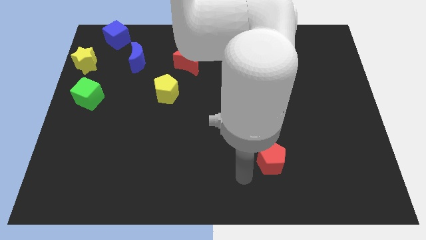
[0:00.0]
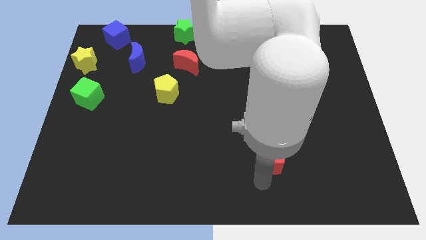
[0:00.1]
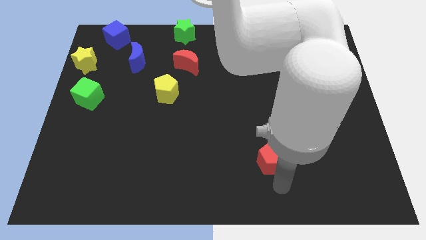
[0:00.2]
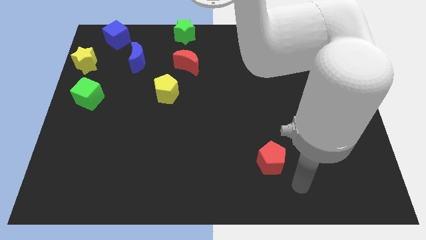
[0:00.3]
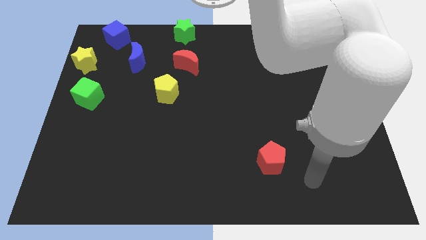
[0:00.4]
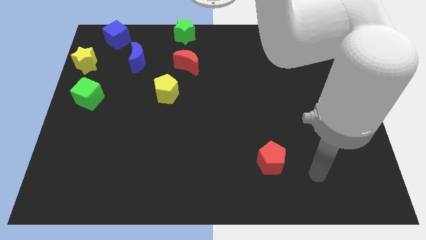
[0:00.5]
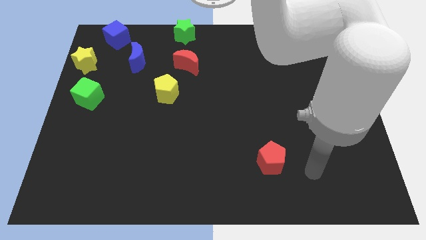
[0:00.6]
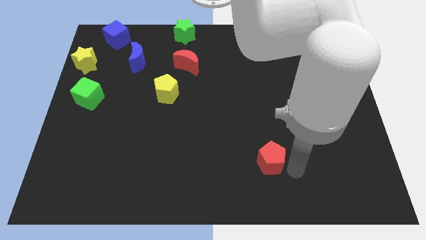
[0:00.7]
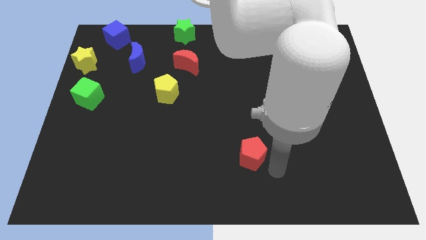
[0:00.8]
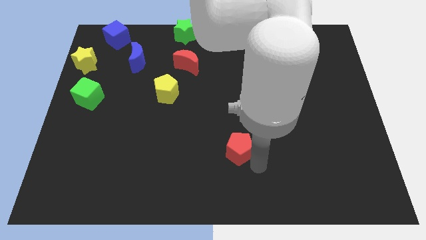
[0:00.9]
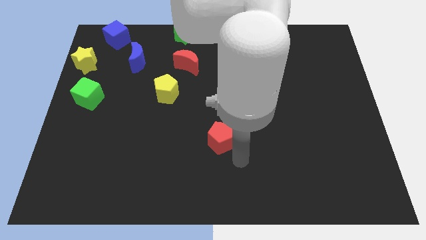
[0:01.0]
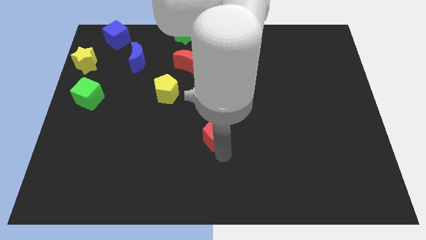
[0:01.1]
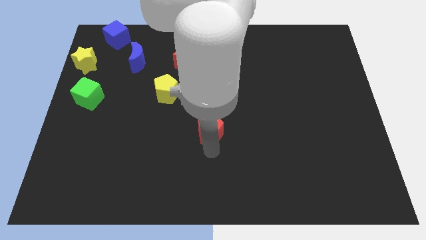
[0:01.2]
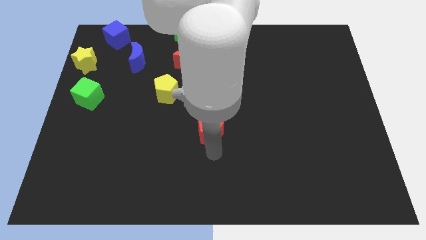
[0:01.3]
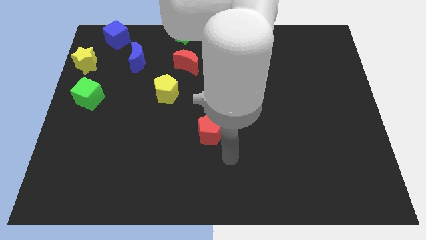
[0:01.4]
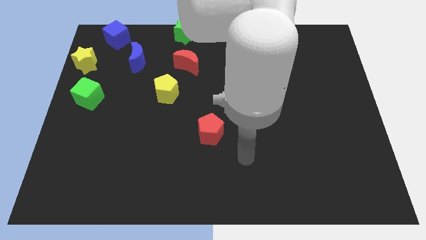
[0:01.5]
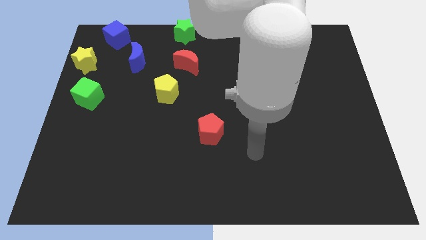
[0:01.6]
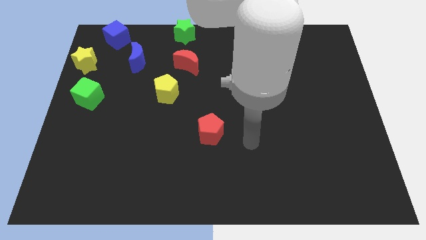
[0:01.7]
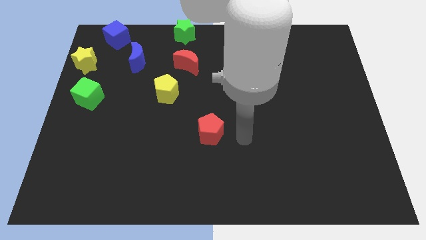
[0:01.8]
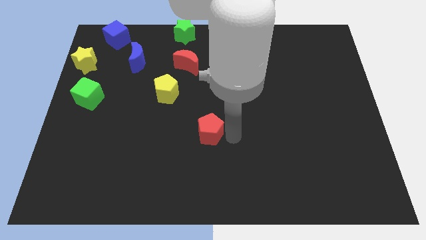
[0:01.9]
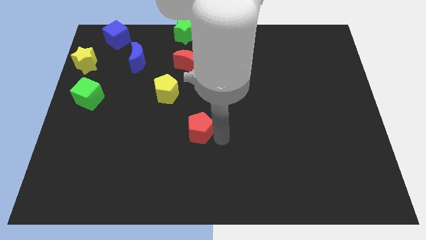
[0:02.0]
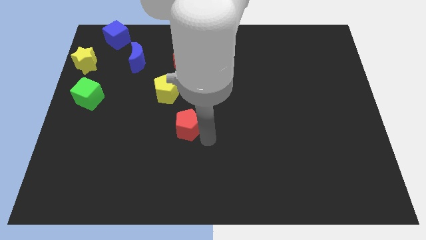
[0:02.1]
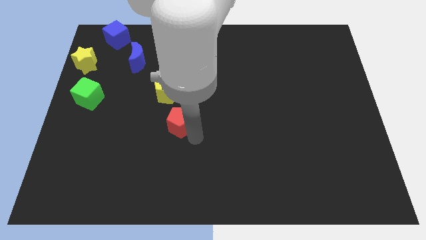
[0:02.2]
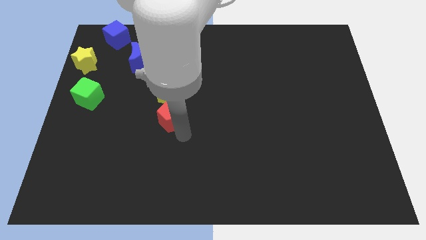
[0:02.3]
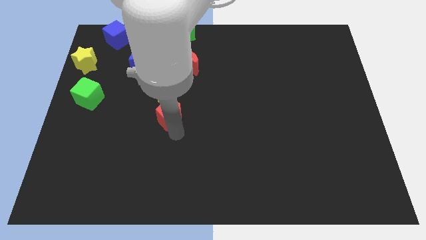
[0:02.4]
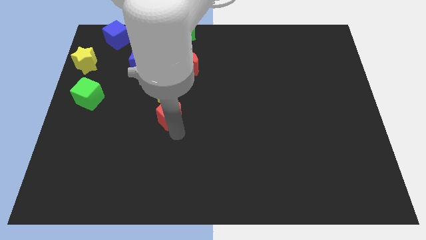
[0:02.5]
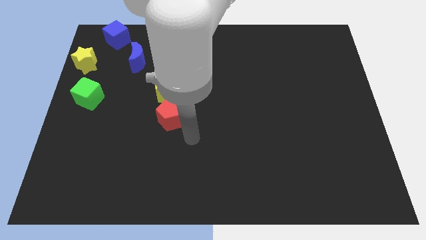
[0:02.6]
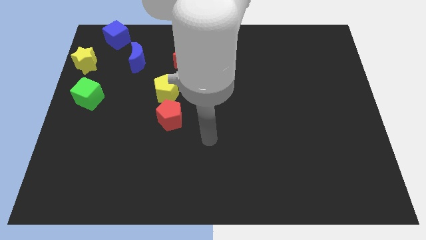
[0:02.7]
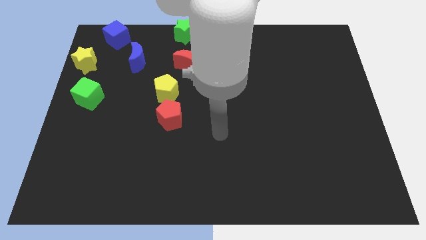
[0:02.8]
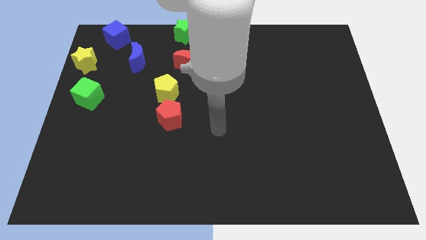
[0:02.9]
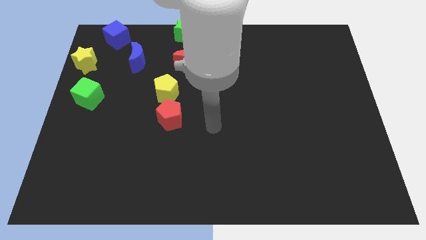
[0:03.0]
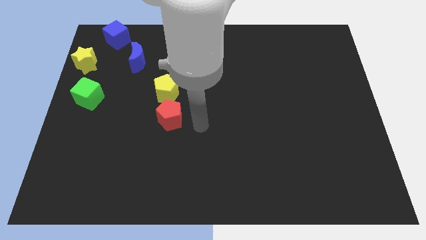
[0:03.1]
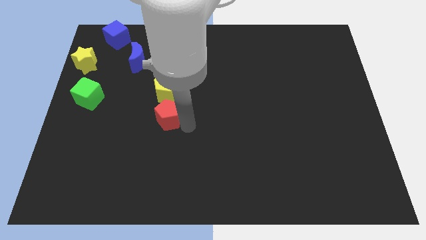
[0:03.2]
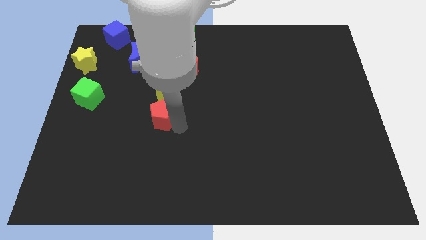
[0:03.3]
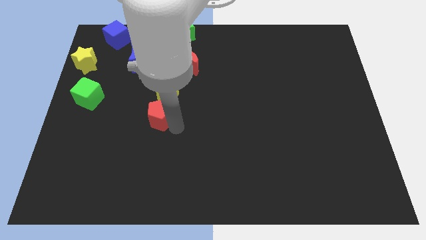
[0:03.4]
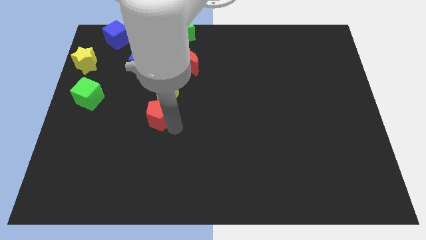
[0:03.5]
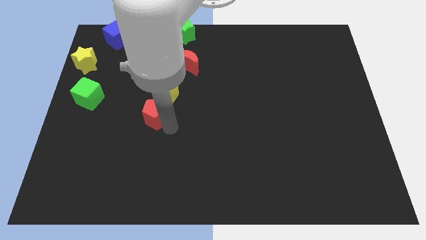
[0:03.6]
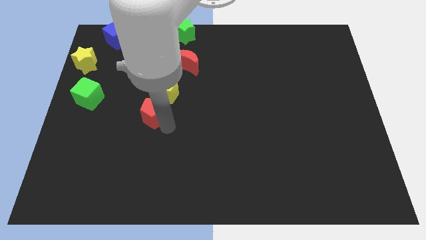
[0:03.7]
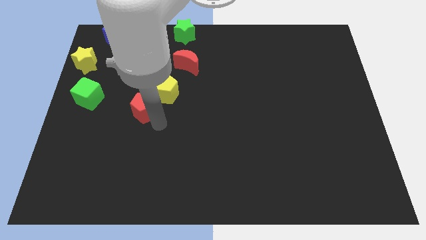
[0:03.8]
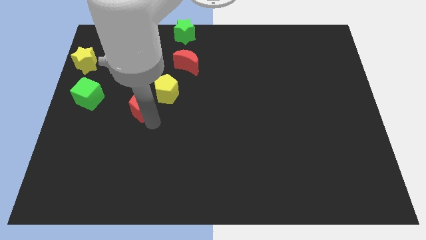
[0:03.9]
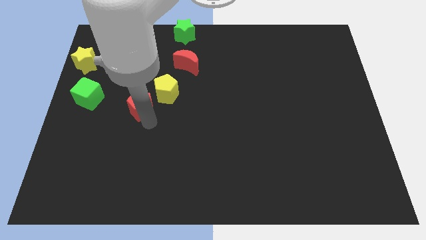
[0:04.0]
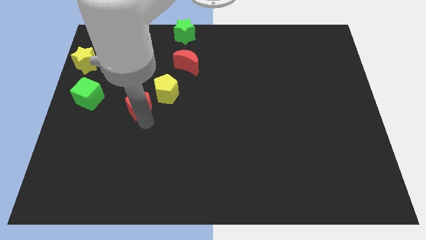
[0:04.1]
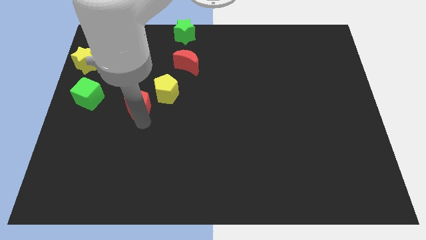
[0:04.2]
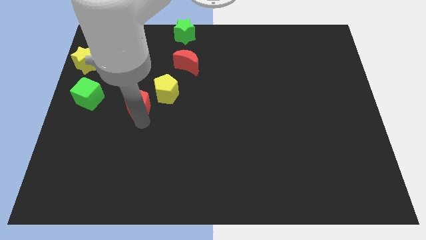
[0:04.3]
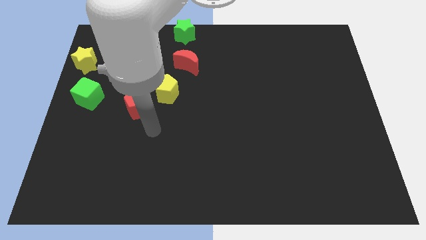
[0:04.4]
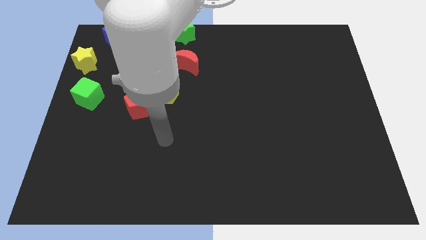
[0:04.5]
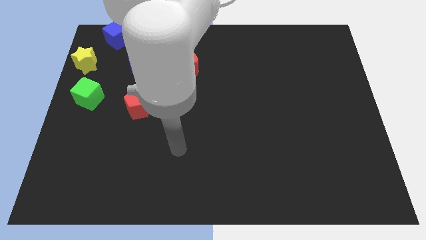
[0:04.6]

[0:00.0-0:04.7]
move red pentagon left beside the yellow pentagon

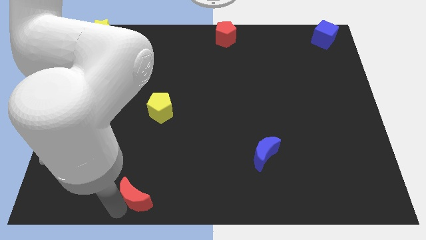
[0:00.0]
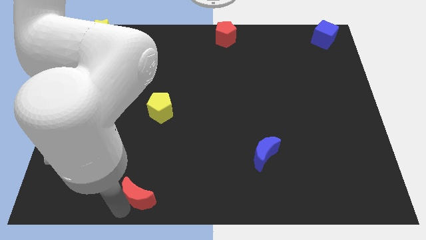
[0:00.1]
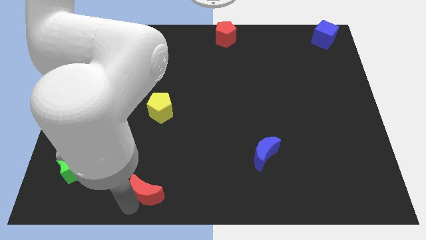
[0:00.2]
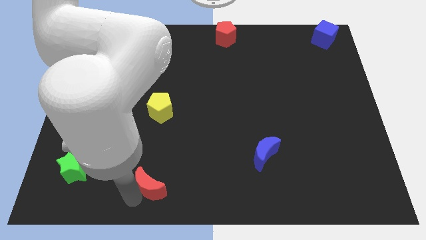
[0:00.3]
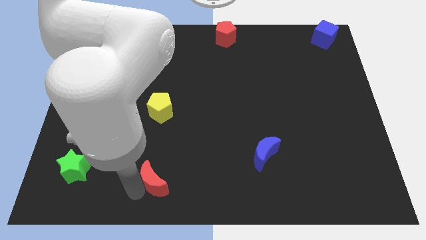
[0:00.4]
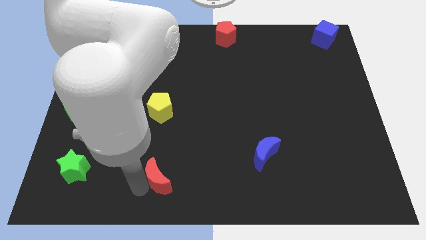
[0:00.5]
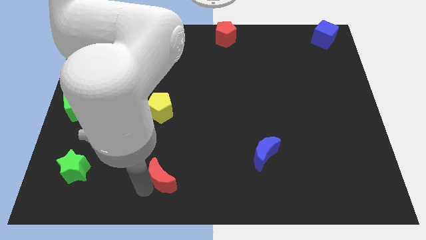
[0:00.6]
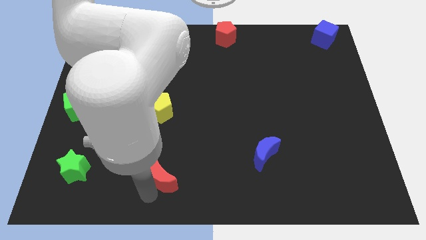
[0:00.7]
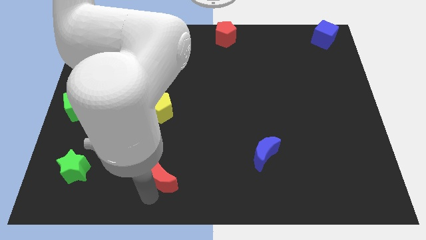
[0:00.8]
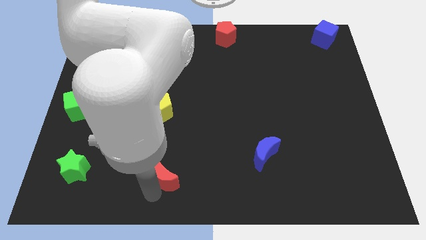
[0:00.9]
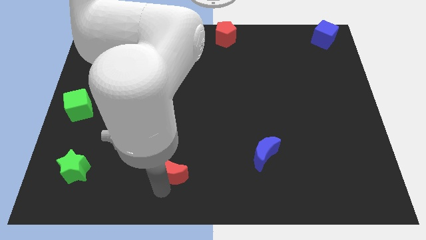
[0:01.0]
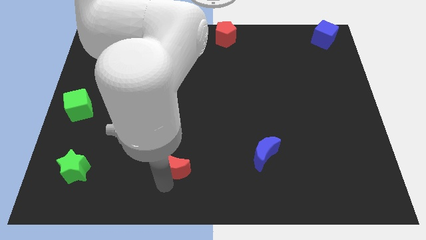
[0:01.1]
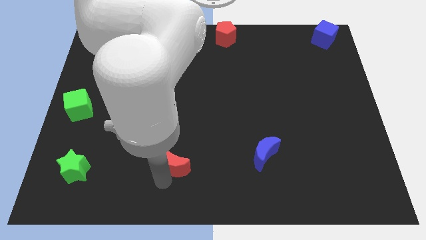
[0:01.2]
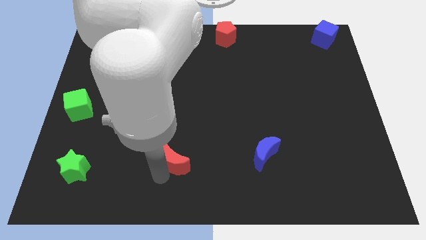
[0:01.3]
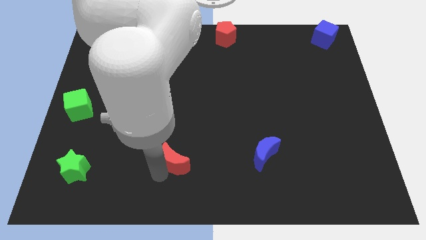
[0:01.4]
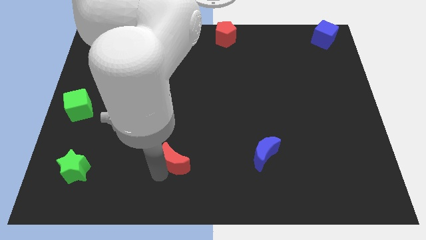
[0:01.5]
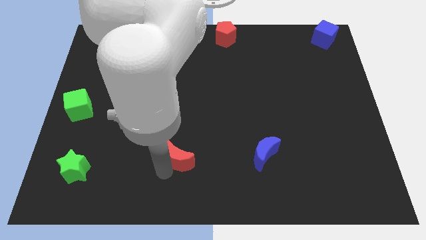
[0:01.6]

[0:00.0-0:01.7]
place the red moon in between the green star and the blue moon

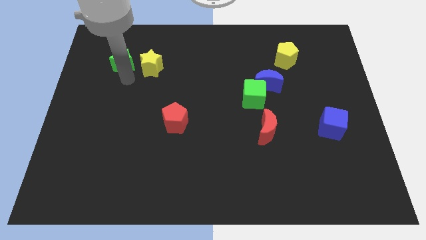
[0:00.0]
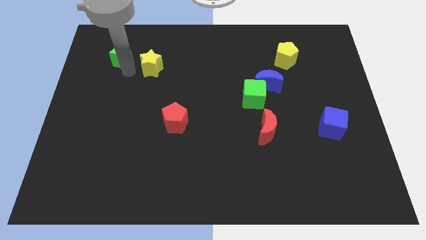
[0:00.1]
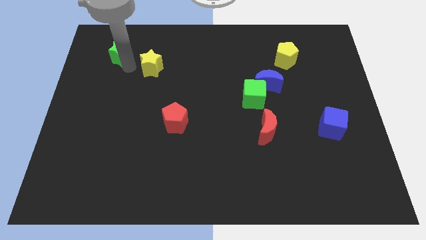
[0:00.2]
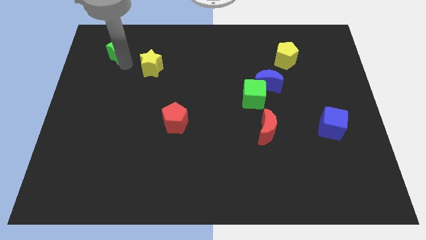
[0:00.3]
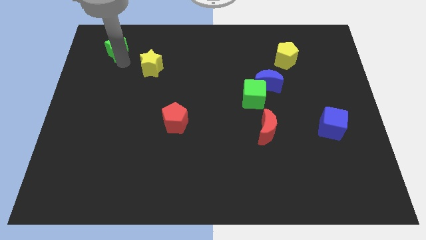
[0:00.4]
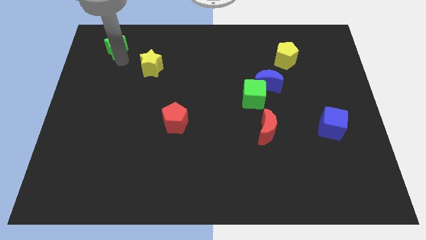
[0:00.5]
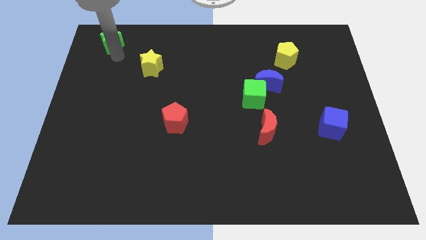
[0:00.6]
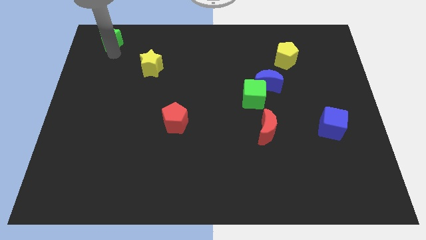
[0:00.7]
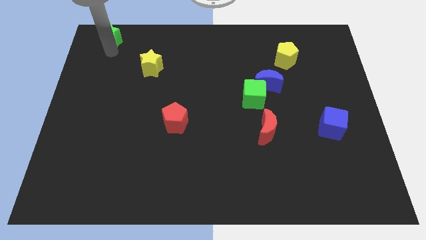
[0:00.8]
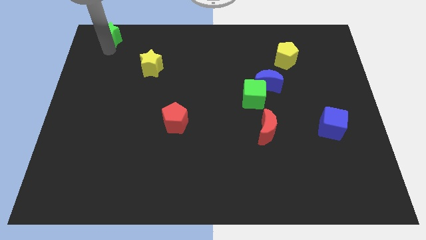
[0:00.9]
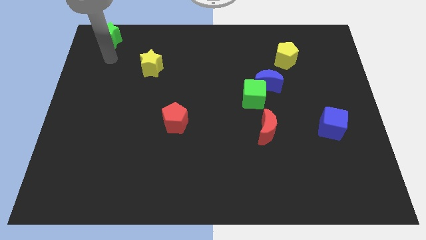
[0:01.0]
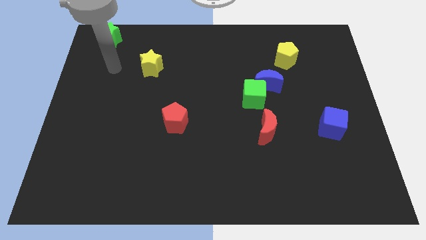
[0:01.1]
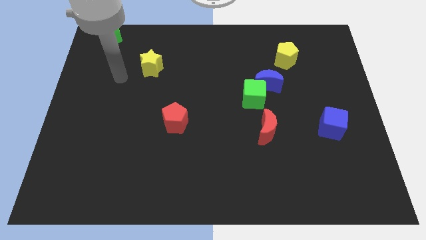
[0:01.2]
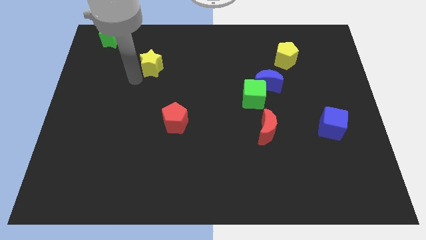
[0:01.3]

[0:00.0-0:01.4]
push the green star to the top left corner of the board

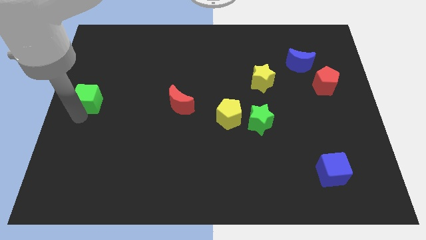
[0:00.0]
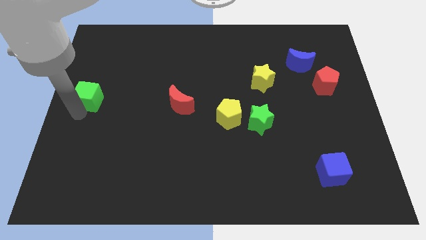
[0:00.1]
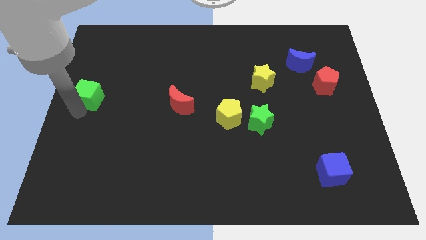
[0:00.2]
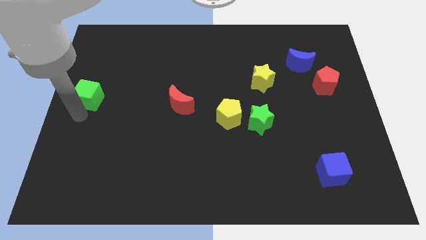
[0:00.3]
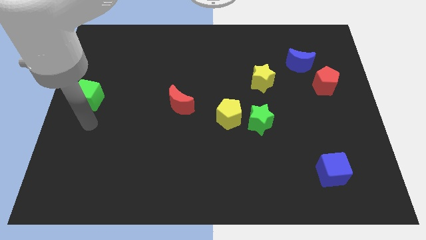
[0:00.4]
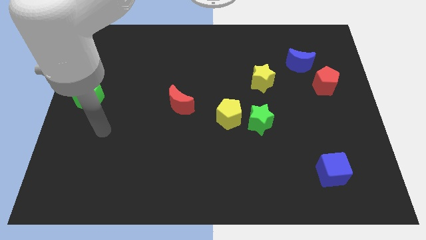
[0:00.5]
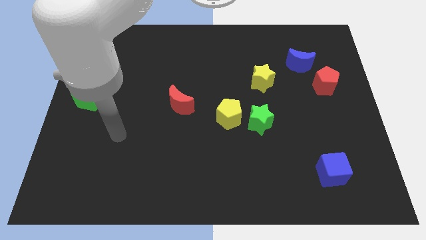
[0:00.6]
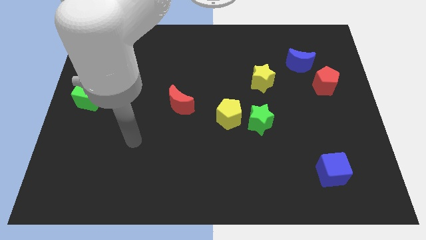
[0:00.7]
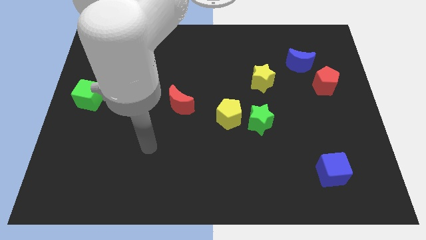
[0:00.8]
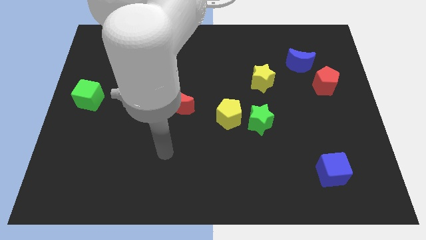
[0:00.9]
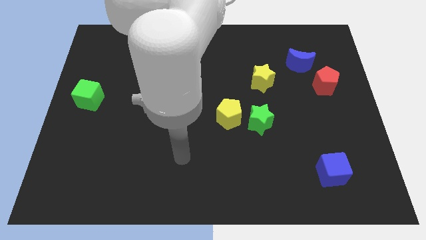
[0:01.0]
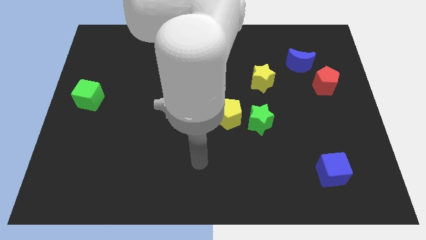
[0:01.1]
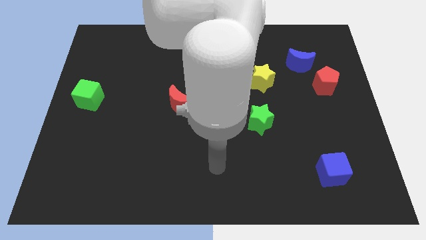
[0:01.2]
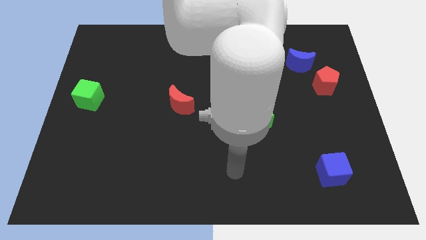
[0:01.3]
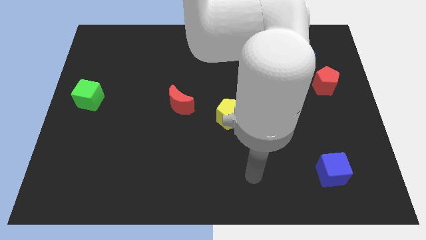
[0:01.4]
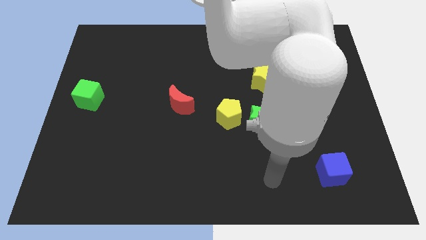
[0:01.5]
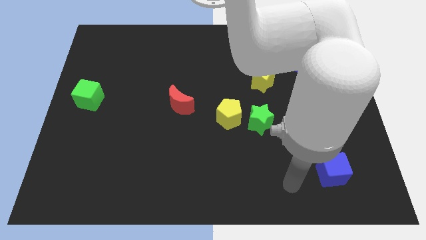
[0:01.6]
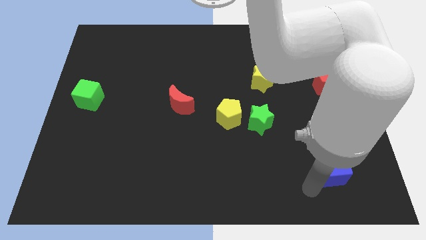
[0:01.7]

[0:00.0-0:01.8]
slide the arm close to the blue cube
